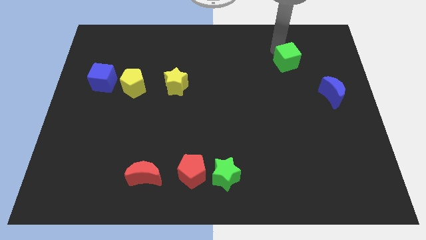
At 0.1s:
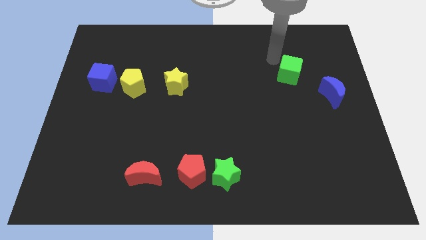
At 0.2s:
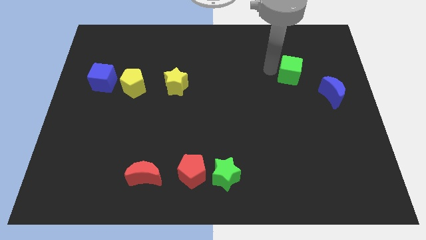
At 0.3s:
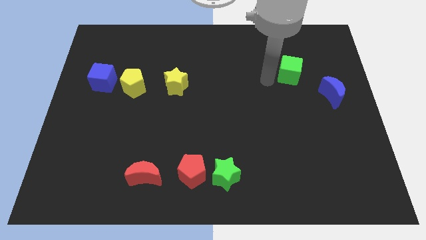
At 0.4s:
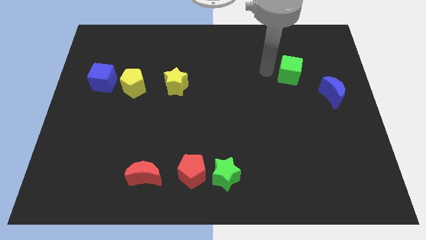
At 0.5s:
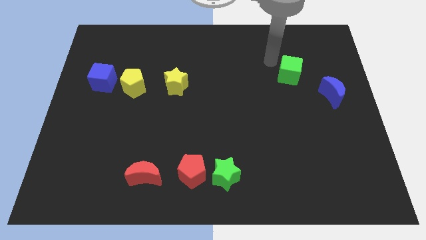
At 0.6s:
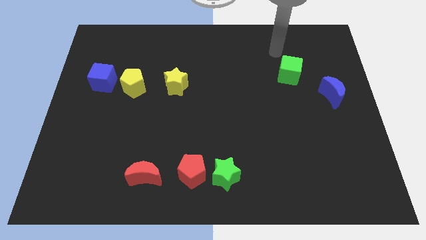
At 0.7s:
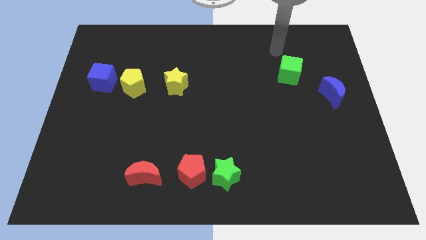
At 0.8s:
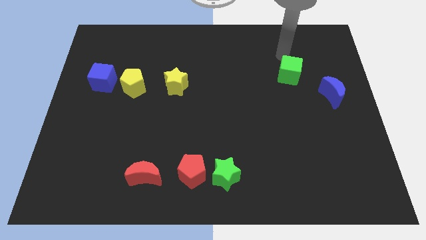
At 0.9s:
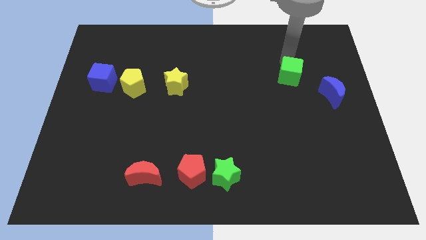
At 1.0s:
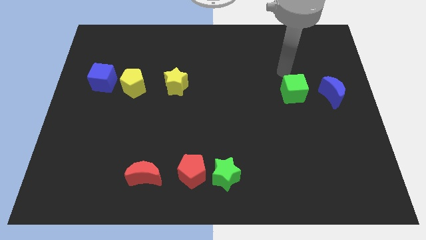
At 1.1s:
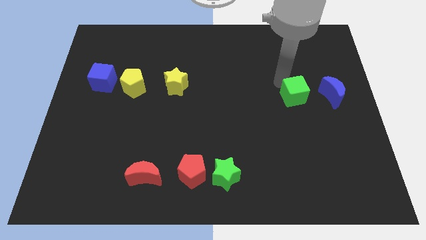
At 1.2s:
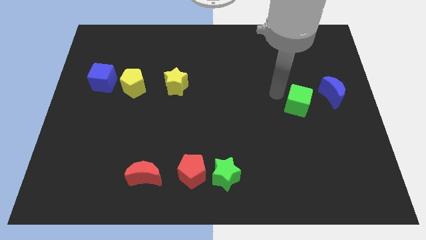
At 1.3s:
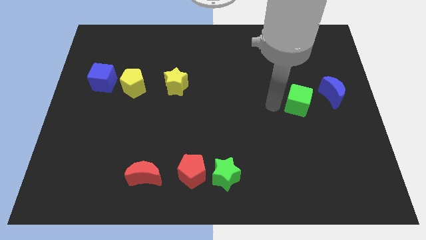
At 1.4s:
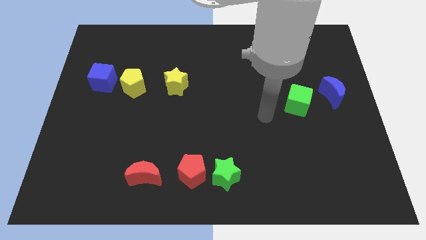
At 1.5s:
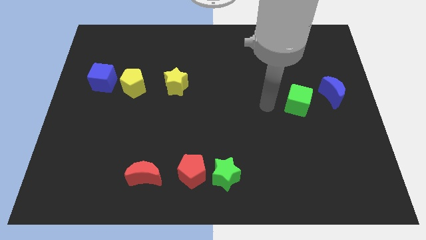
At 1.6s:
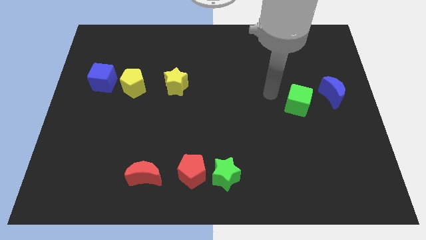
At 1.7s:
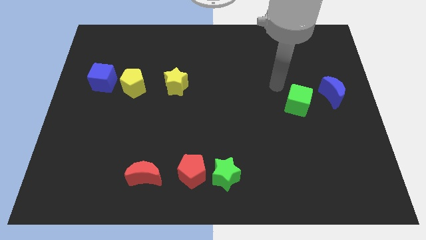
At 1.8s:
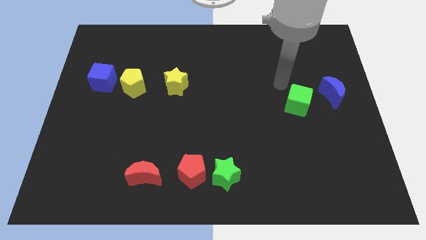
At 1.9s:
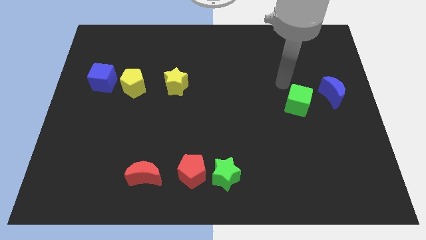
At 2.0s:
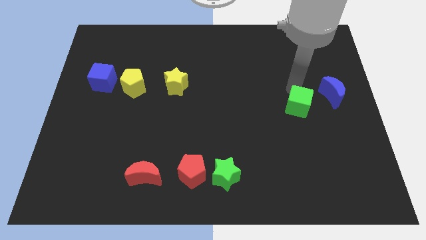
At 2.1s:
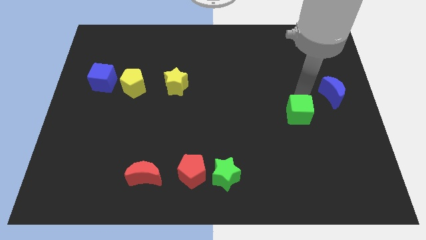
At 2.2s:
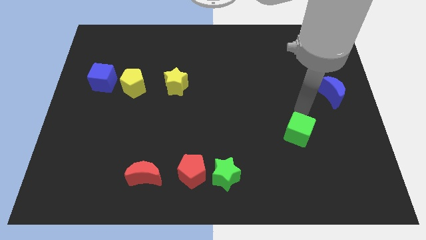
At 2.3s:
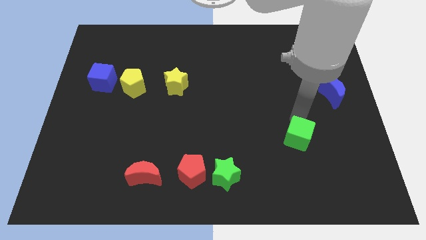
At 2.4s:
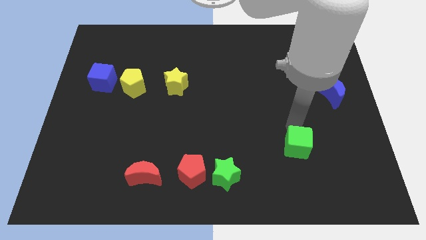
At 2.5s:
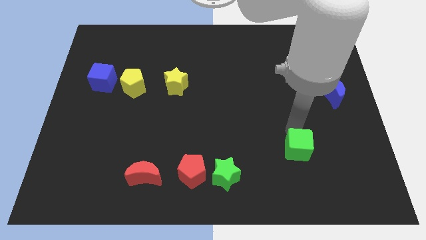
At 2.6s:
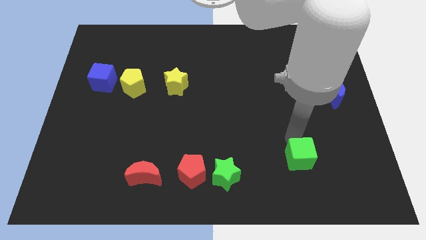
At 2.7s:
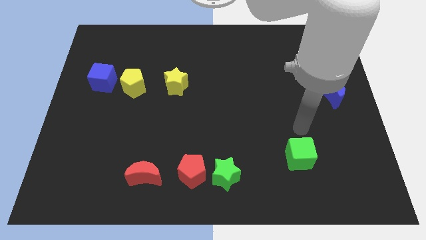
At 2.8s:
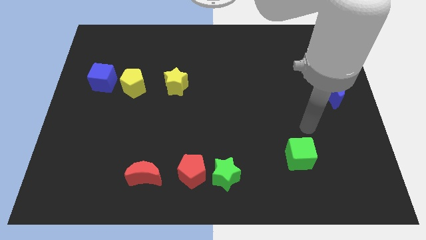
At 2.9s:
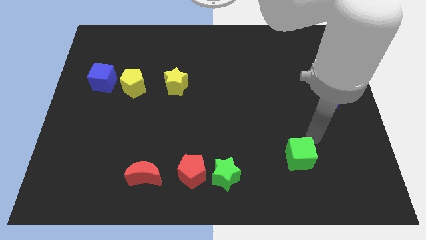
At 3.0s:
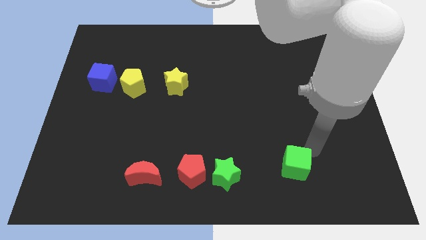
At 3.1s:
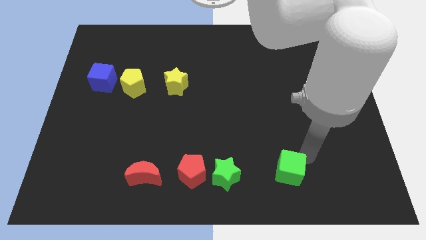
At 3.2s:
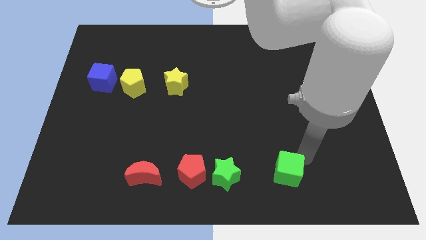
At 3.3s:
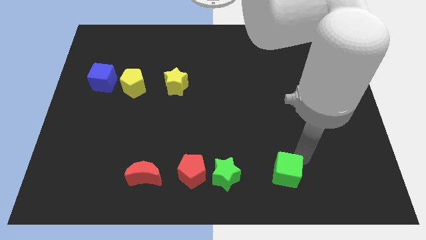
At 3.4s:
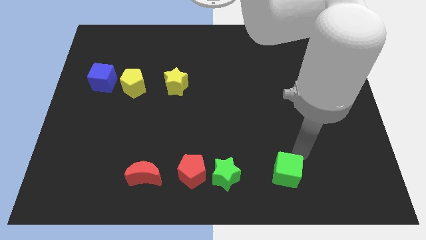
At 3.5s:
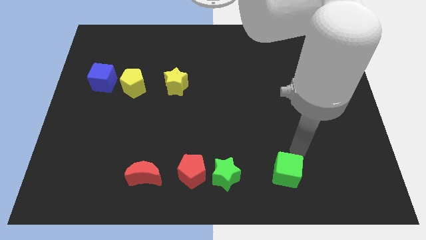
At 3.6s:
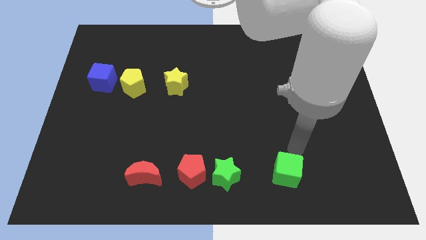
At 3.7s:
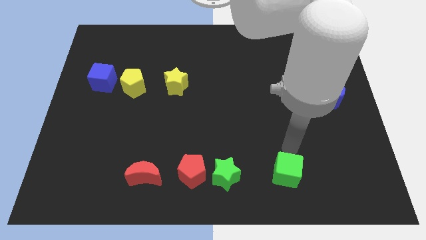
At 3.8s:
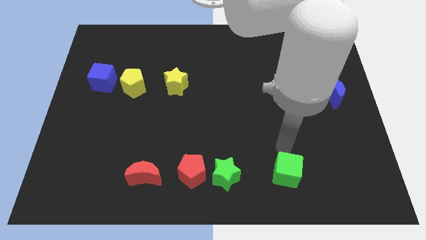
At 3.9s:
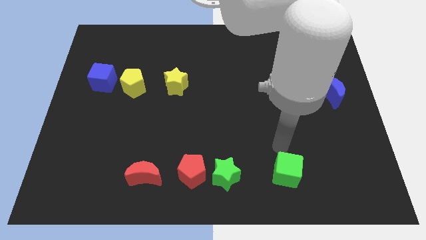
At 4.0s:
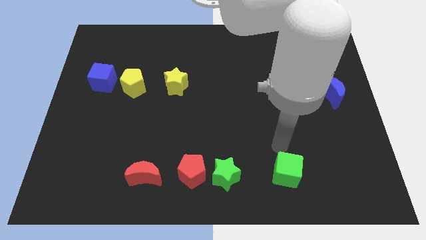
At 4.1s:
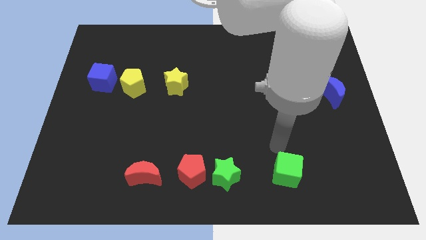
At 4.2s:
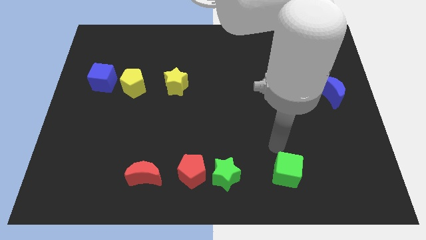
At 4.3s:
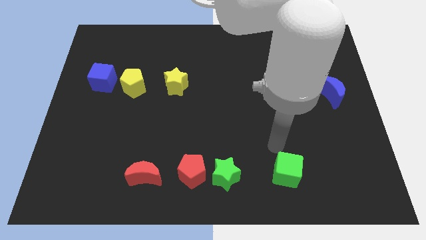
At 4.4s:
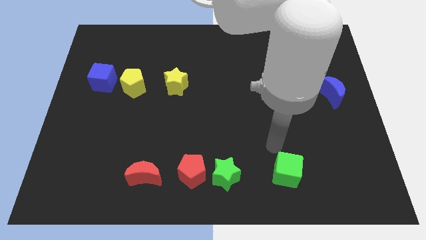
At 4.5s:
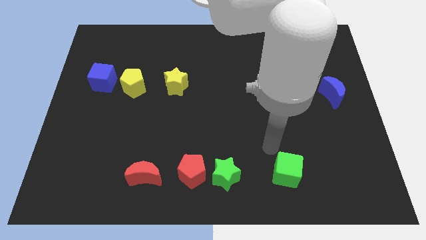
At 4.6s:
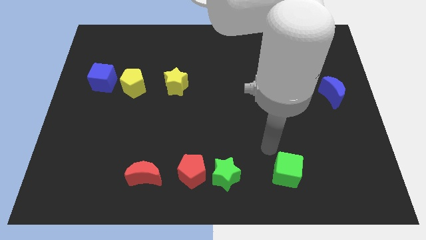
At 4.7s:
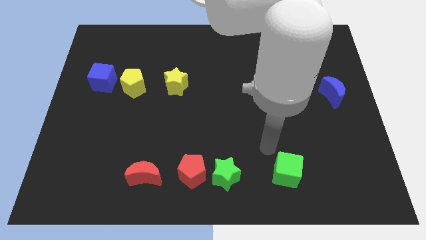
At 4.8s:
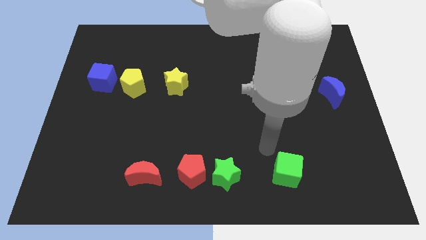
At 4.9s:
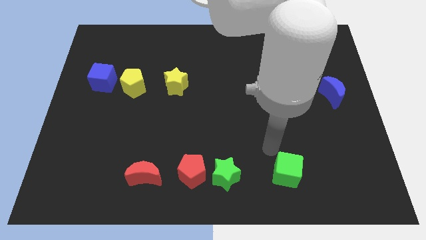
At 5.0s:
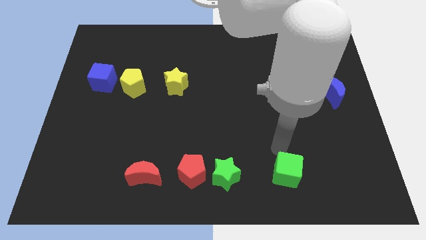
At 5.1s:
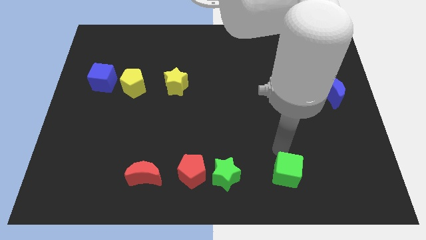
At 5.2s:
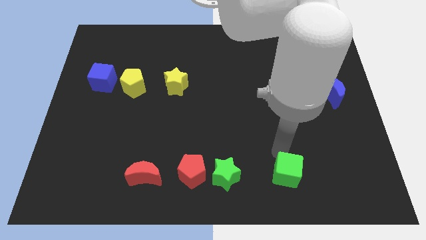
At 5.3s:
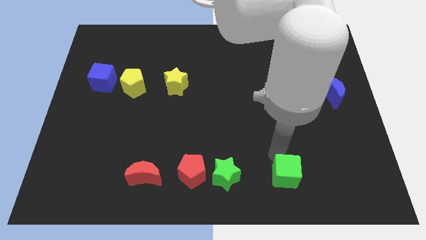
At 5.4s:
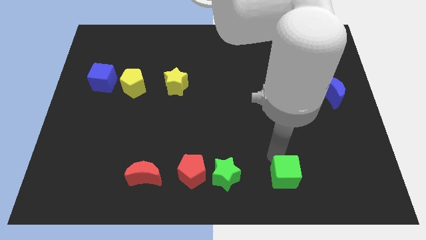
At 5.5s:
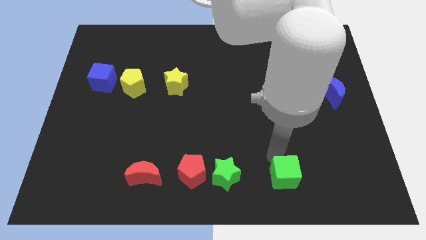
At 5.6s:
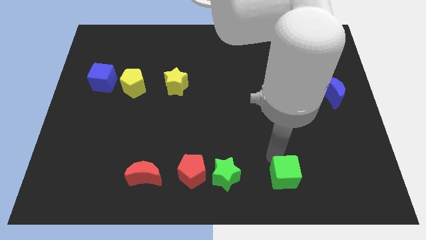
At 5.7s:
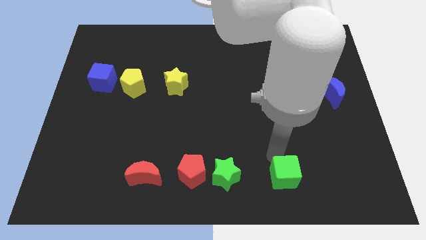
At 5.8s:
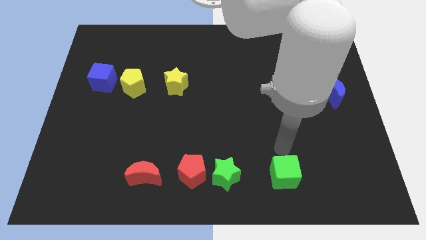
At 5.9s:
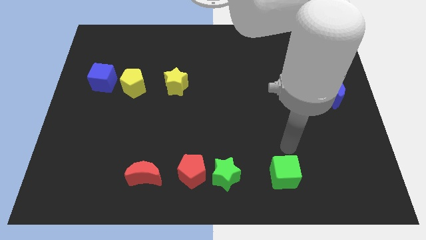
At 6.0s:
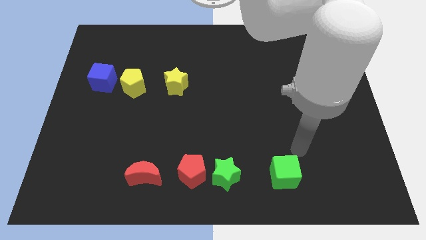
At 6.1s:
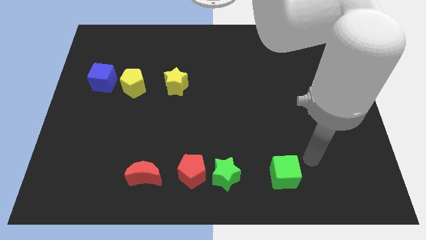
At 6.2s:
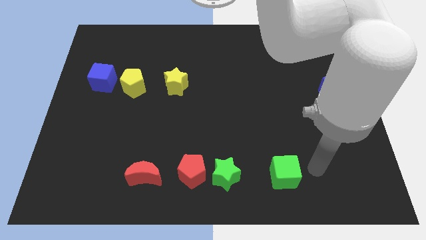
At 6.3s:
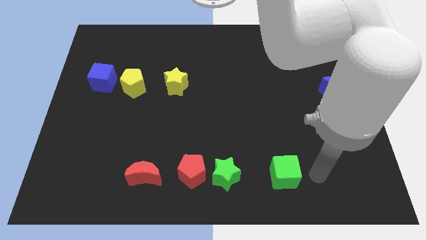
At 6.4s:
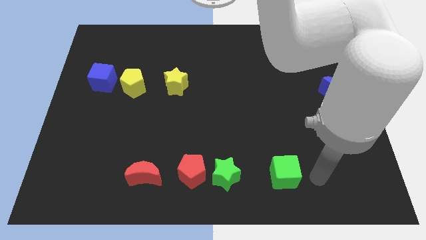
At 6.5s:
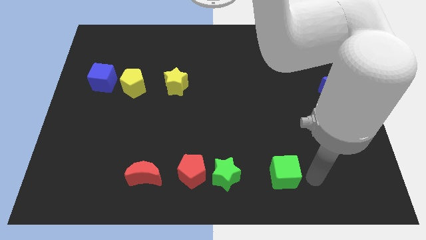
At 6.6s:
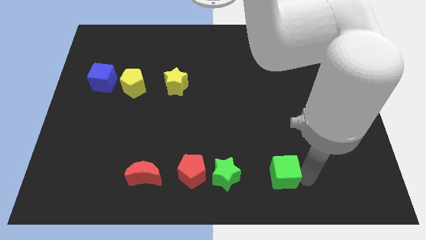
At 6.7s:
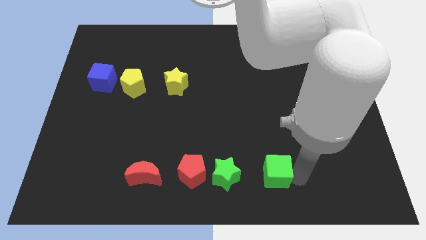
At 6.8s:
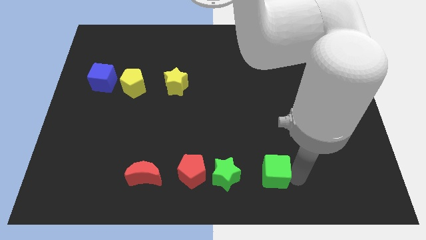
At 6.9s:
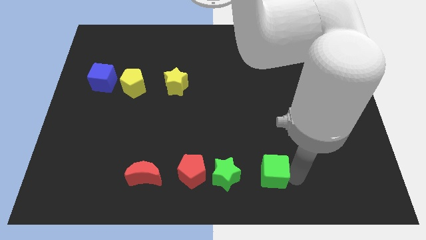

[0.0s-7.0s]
place the green cube beside the green star

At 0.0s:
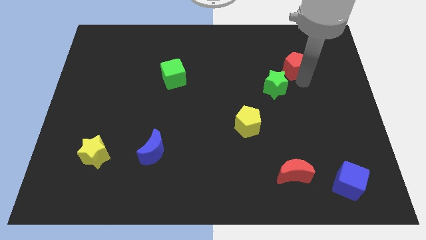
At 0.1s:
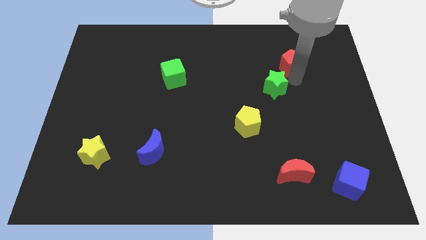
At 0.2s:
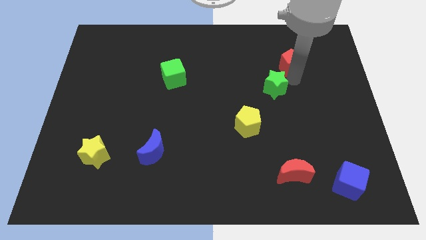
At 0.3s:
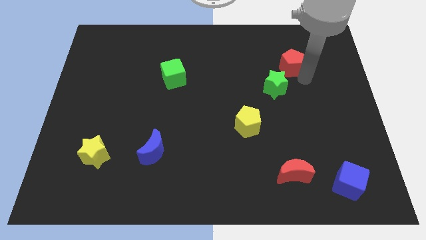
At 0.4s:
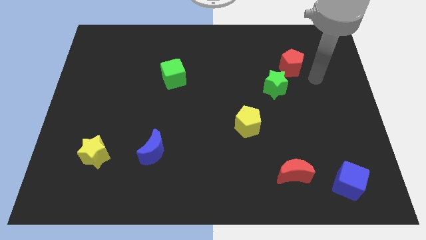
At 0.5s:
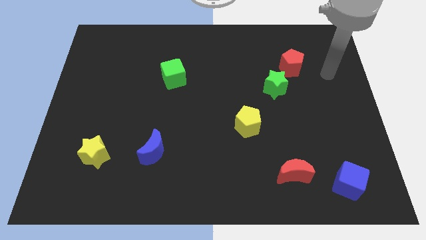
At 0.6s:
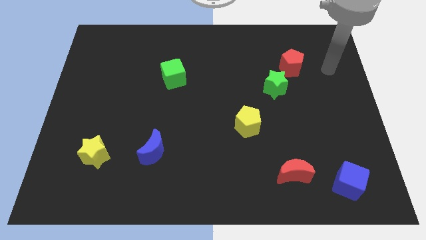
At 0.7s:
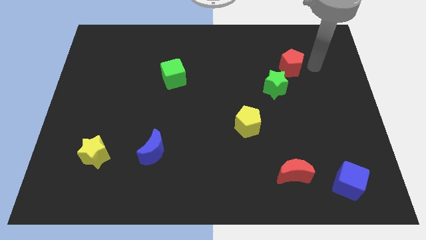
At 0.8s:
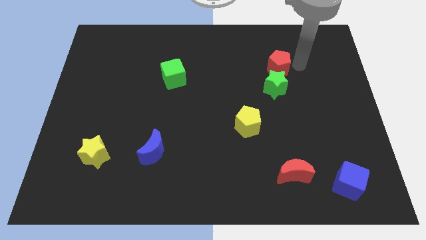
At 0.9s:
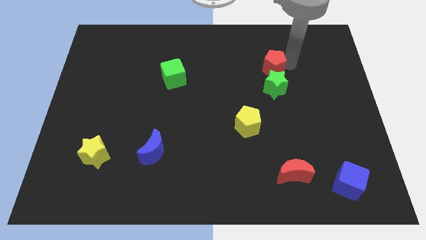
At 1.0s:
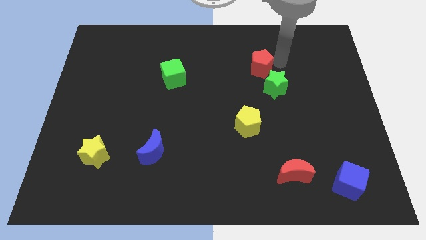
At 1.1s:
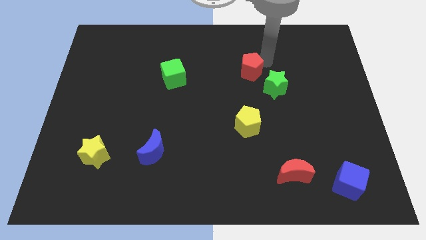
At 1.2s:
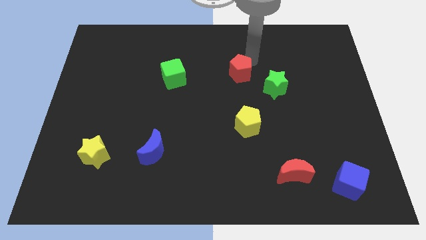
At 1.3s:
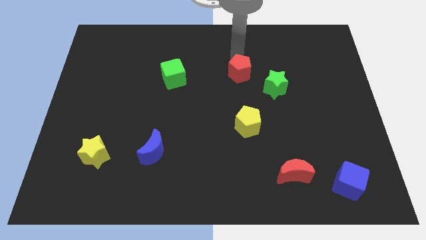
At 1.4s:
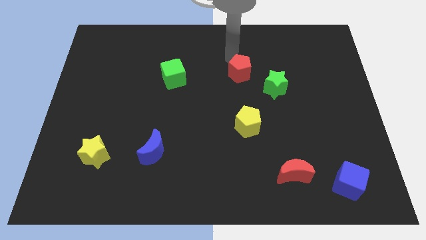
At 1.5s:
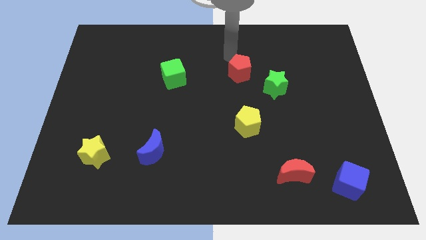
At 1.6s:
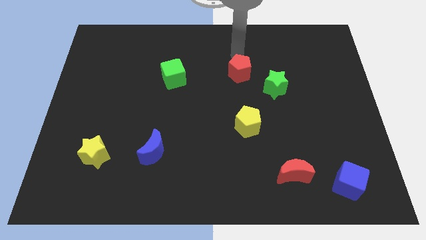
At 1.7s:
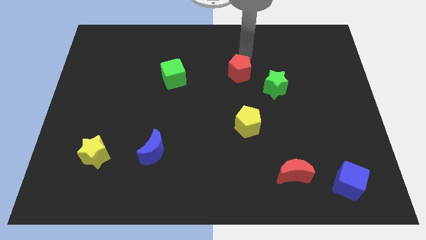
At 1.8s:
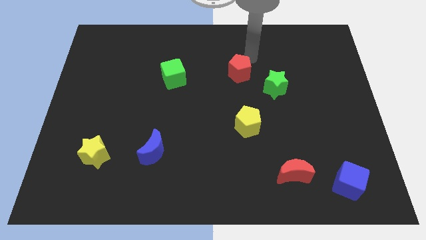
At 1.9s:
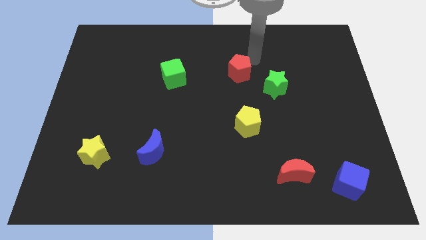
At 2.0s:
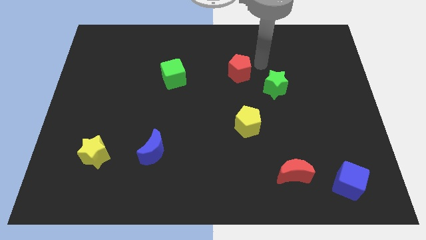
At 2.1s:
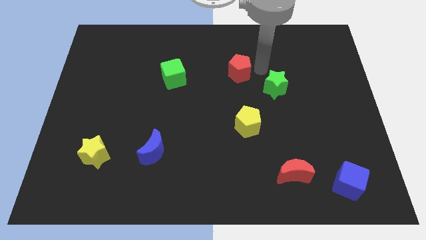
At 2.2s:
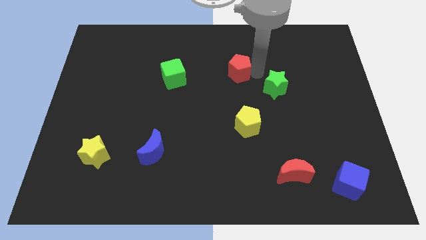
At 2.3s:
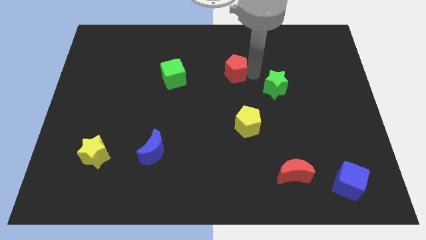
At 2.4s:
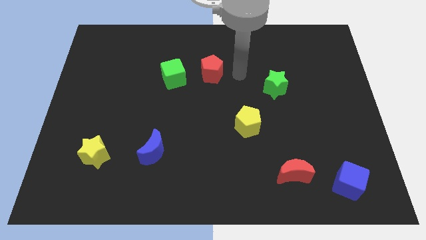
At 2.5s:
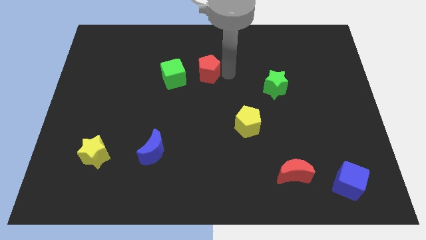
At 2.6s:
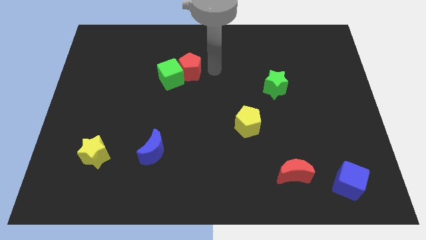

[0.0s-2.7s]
place the red pentagon right to the green square
